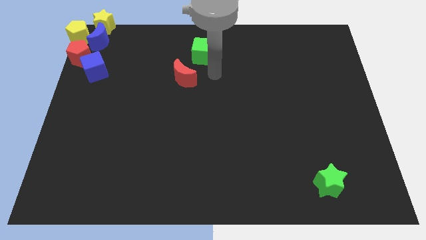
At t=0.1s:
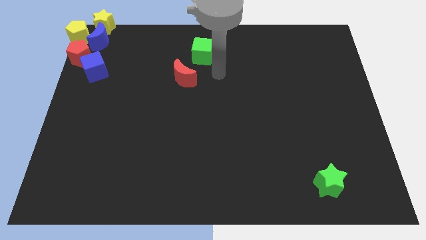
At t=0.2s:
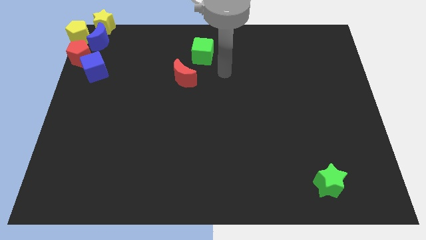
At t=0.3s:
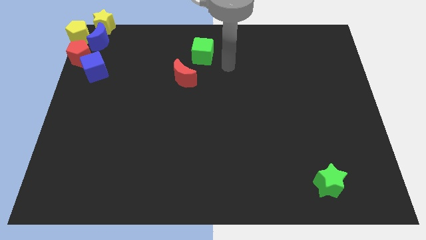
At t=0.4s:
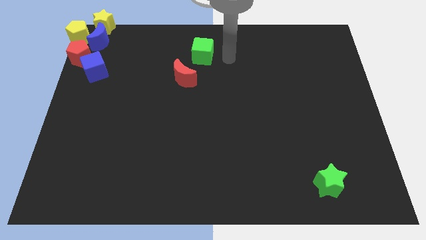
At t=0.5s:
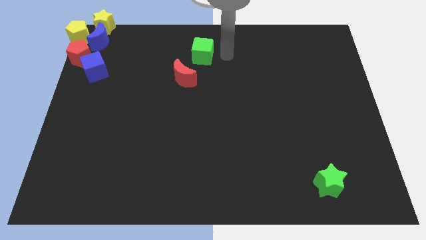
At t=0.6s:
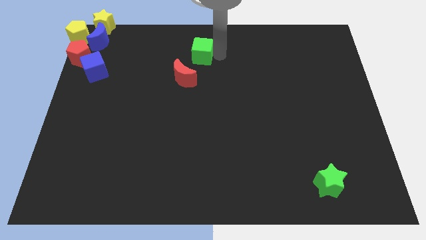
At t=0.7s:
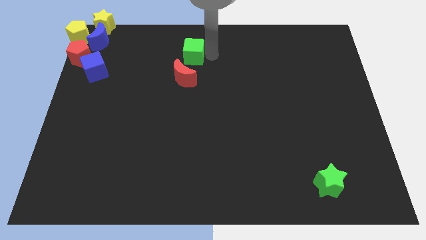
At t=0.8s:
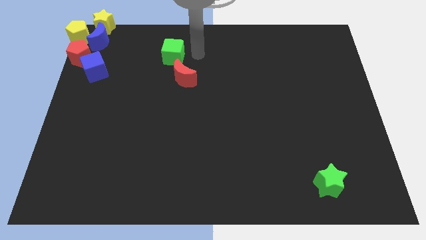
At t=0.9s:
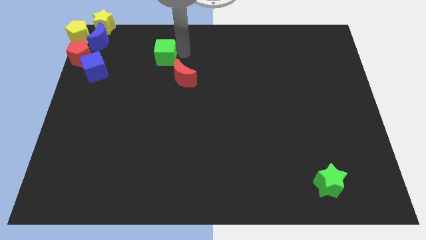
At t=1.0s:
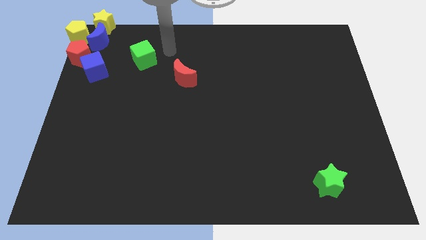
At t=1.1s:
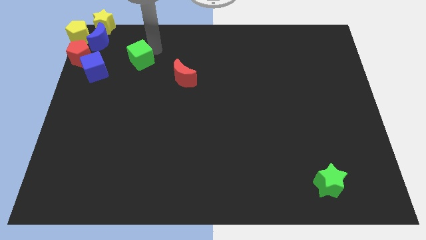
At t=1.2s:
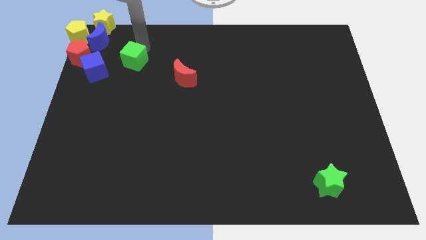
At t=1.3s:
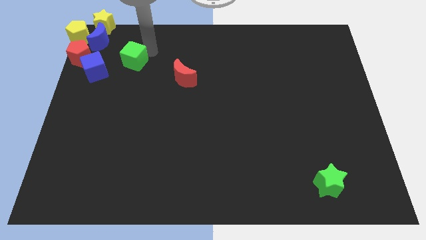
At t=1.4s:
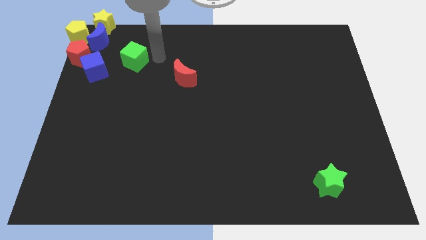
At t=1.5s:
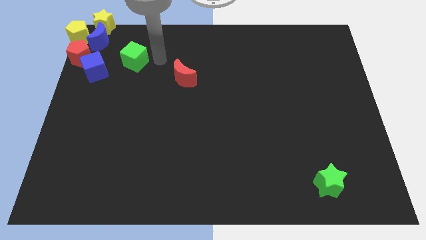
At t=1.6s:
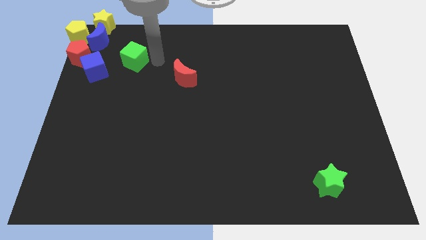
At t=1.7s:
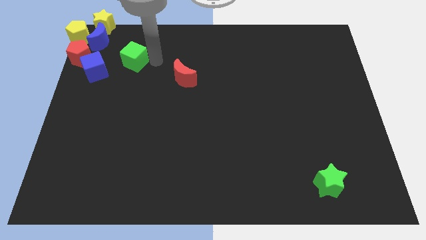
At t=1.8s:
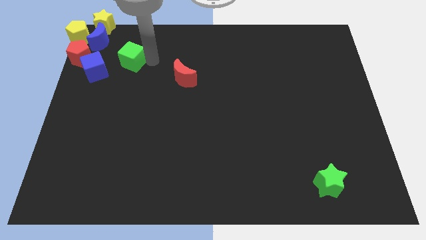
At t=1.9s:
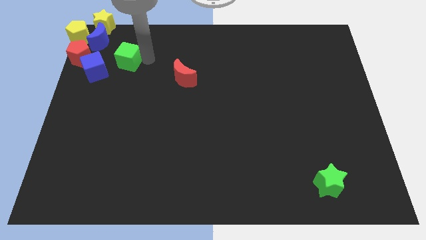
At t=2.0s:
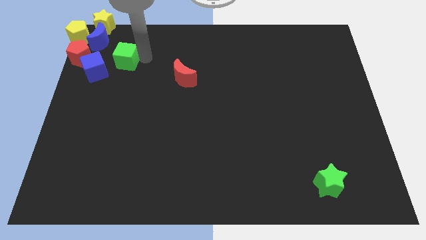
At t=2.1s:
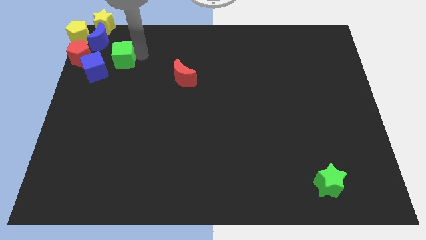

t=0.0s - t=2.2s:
slide green cube to the top right of blue cube

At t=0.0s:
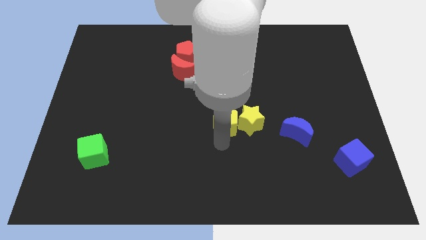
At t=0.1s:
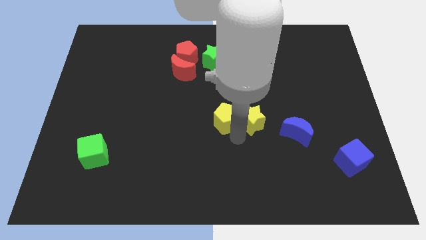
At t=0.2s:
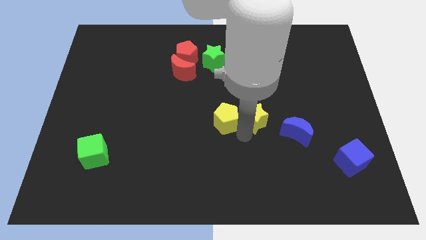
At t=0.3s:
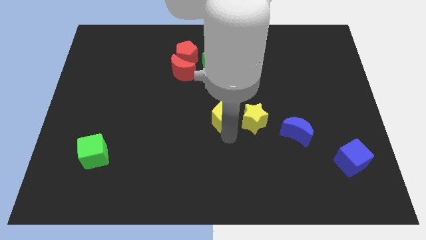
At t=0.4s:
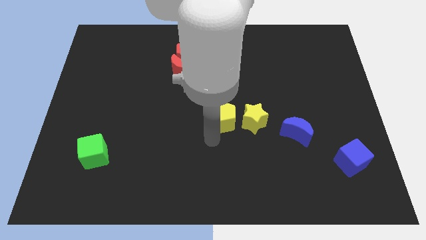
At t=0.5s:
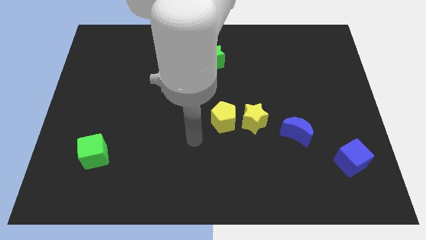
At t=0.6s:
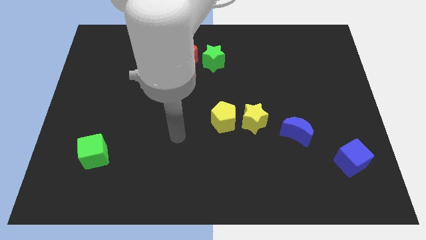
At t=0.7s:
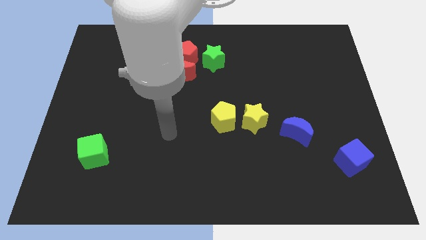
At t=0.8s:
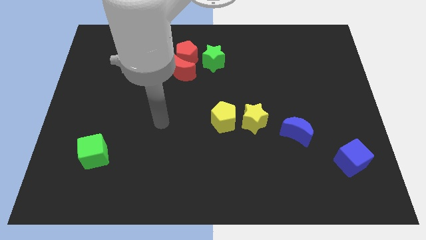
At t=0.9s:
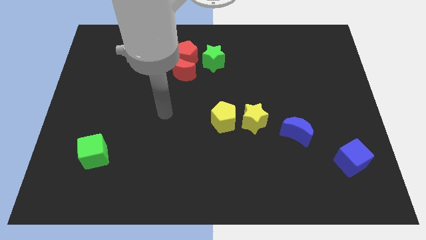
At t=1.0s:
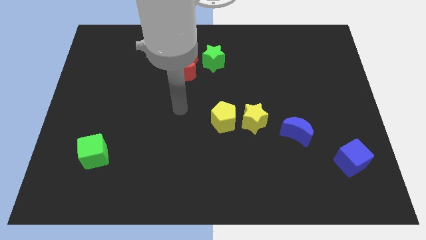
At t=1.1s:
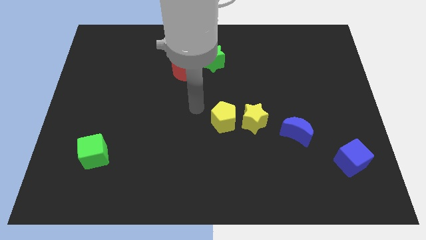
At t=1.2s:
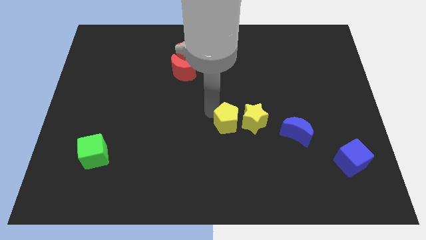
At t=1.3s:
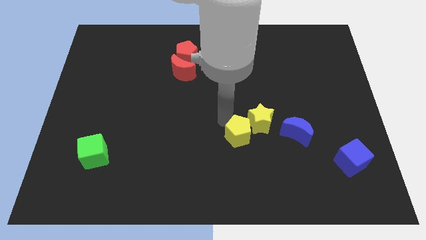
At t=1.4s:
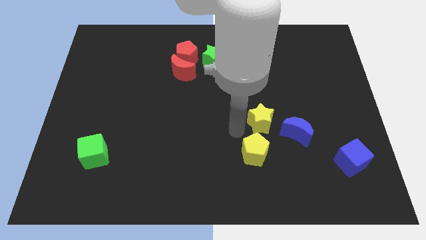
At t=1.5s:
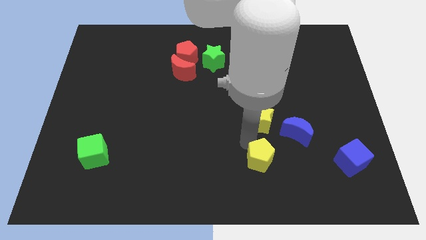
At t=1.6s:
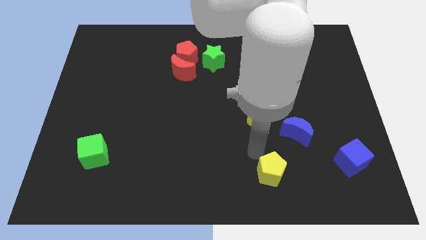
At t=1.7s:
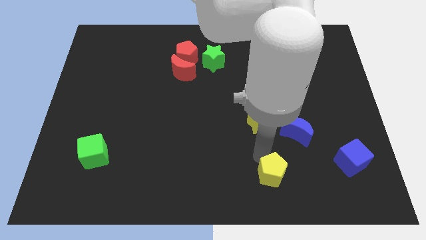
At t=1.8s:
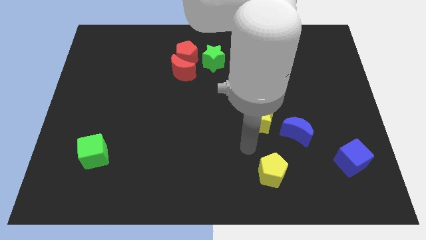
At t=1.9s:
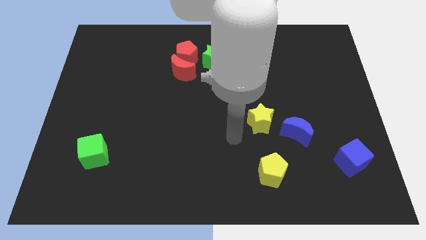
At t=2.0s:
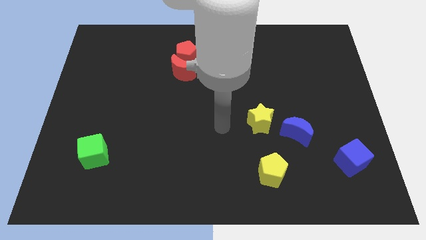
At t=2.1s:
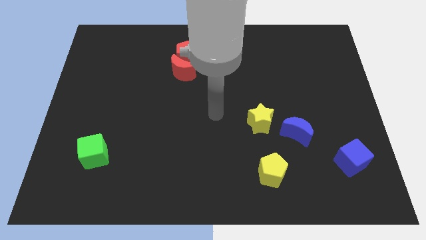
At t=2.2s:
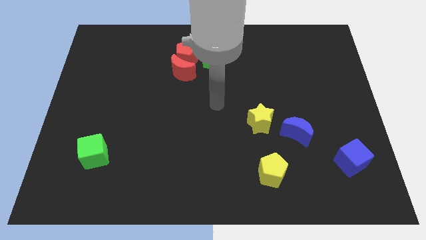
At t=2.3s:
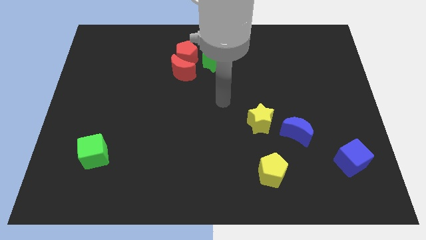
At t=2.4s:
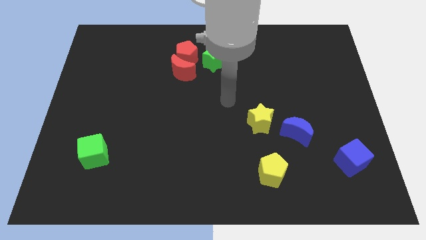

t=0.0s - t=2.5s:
place the yellow pentagon below the blue moon

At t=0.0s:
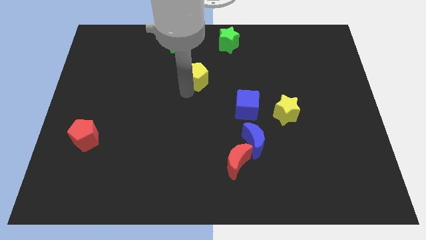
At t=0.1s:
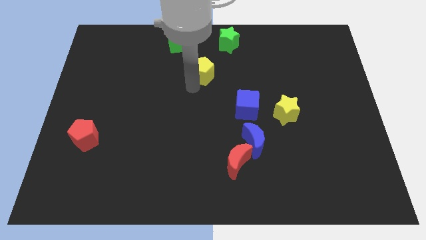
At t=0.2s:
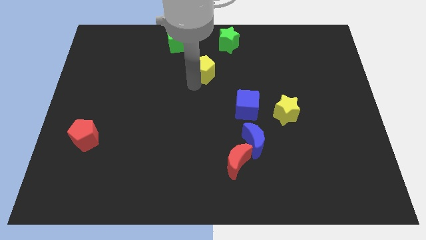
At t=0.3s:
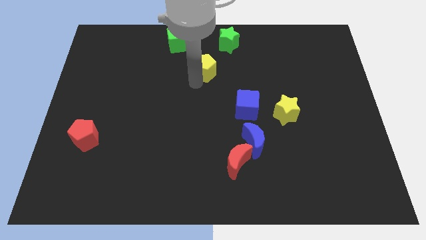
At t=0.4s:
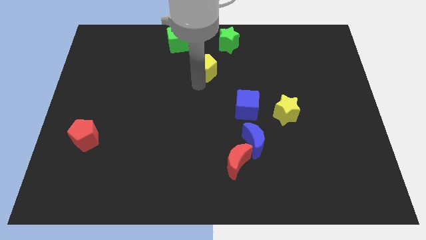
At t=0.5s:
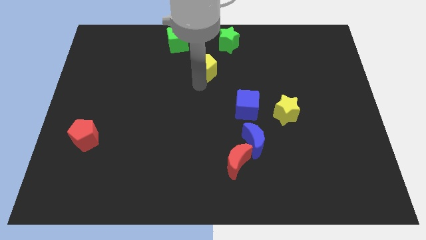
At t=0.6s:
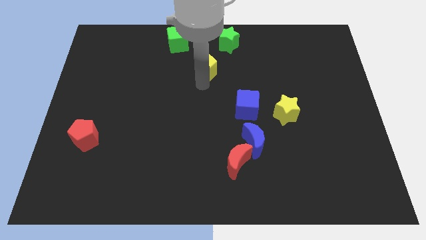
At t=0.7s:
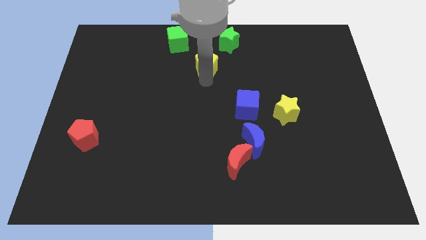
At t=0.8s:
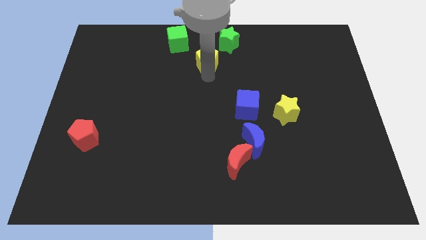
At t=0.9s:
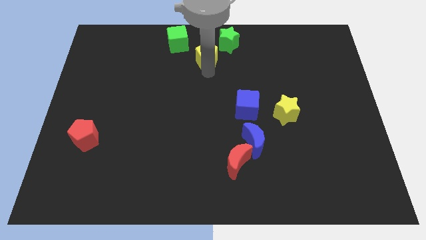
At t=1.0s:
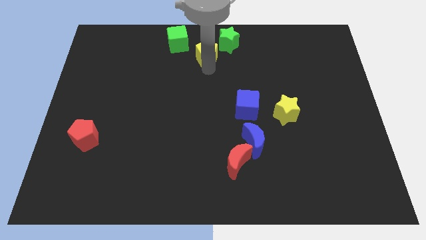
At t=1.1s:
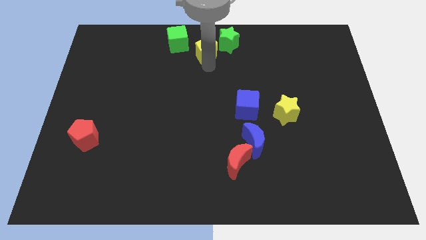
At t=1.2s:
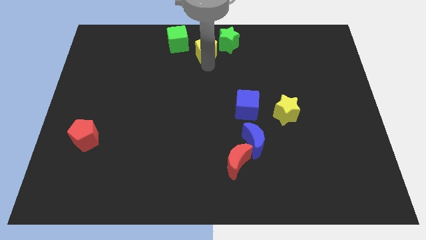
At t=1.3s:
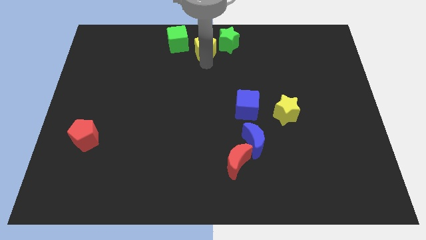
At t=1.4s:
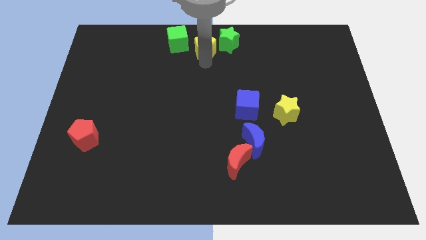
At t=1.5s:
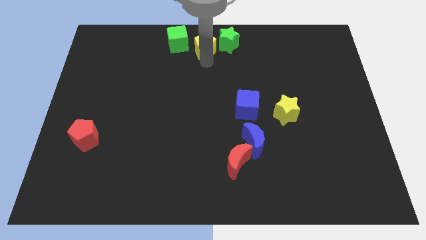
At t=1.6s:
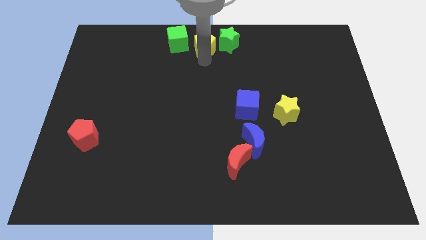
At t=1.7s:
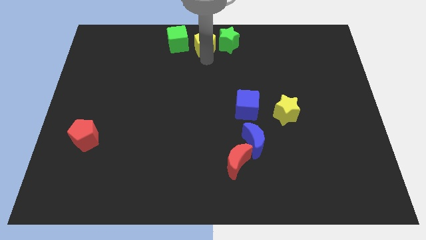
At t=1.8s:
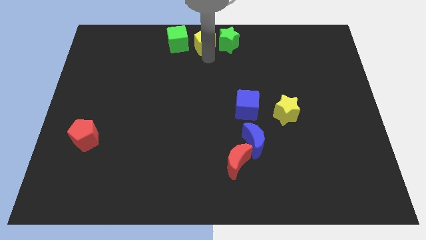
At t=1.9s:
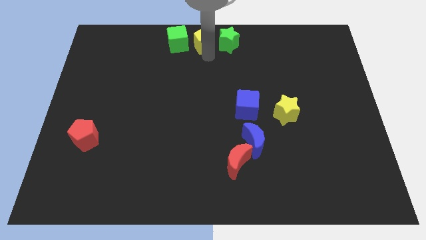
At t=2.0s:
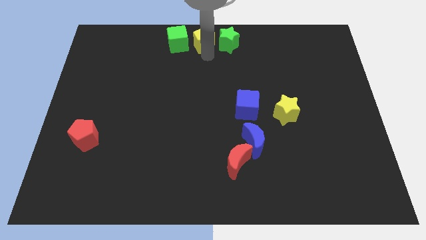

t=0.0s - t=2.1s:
push yellow pentagon to the top center

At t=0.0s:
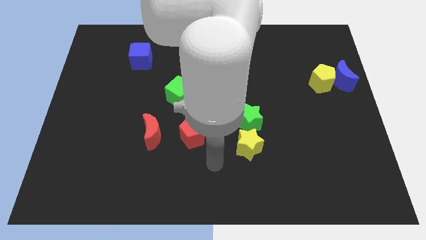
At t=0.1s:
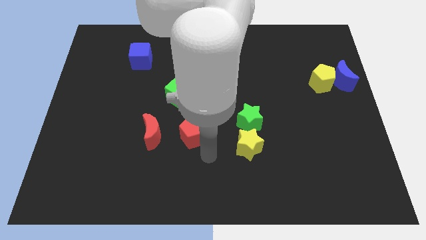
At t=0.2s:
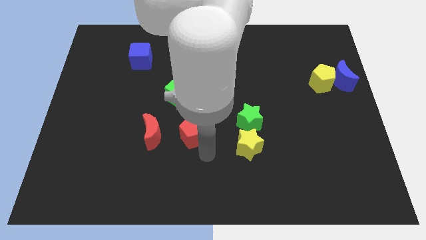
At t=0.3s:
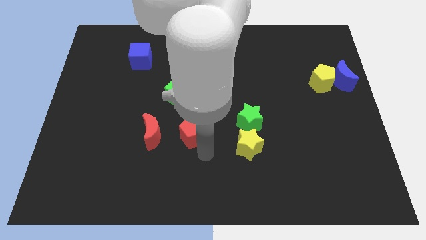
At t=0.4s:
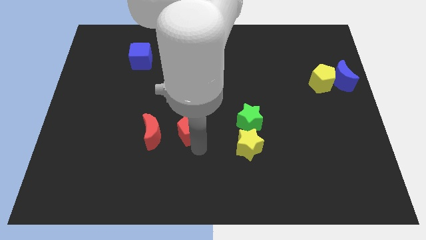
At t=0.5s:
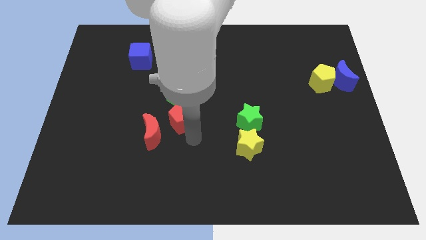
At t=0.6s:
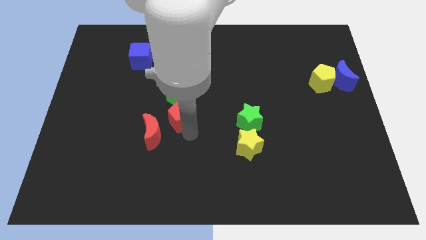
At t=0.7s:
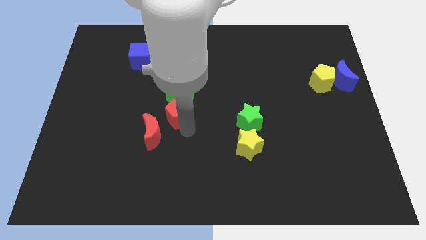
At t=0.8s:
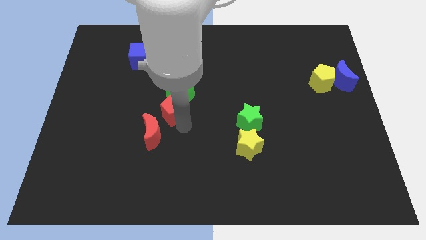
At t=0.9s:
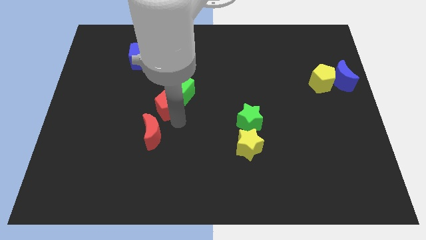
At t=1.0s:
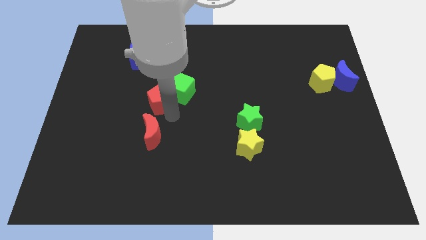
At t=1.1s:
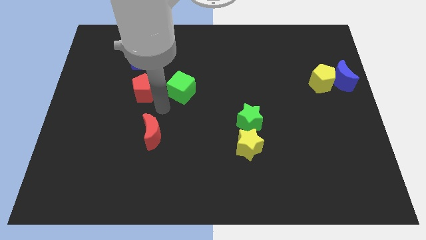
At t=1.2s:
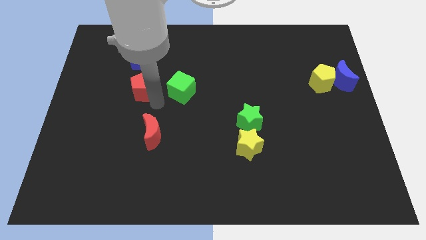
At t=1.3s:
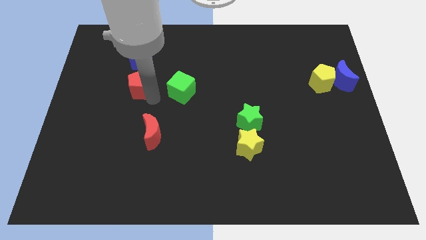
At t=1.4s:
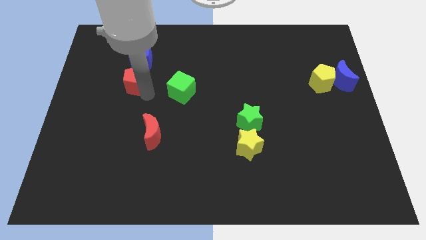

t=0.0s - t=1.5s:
place the red pentagon vertically below the blue cube

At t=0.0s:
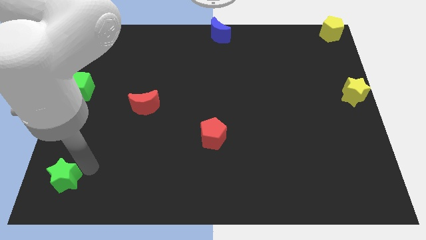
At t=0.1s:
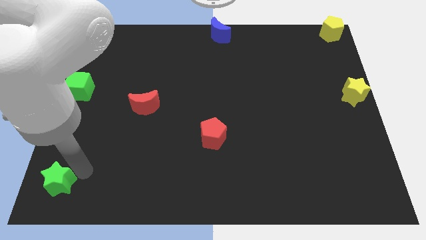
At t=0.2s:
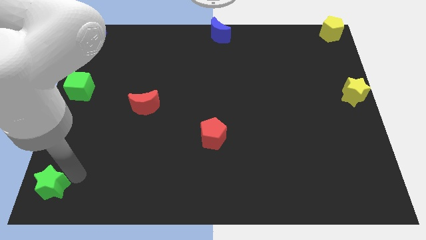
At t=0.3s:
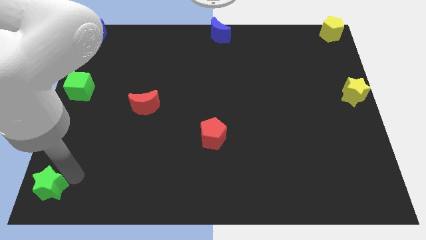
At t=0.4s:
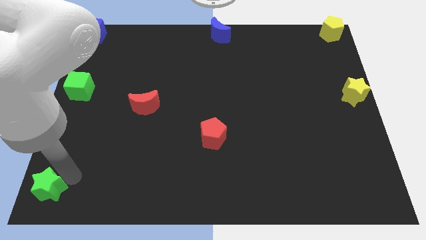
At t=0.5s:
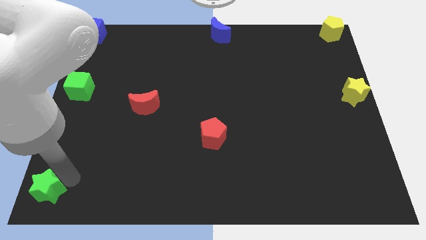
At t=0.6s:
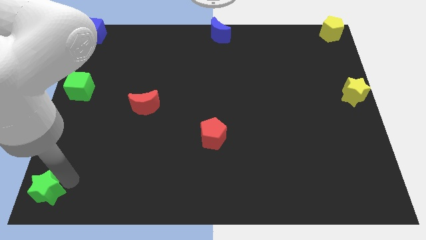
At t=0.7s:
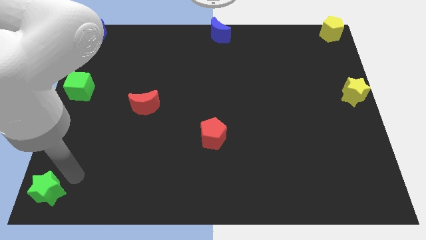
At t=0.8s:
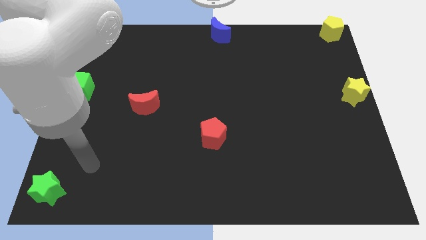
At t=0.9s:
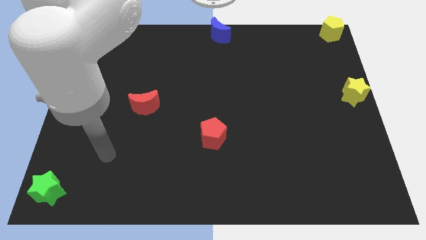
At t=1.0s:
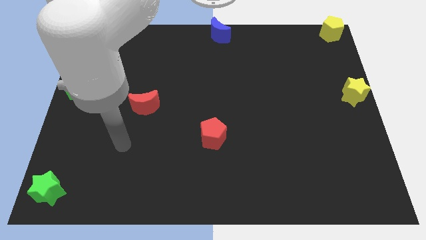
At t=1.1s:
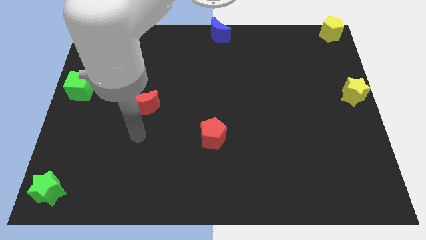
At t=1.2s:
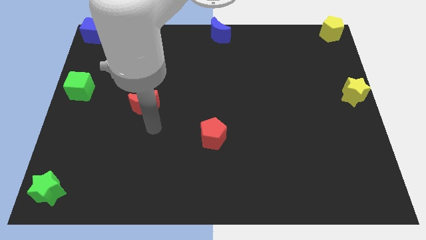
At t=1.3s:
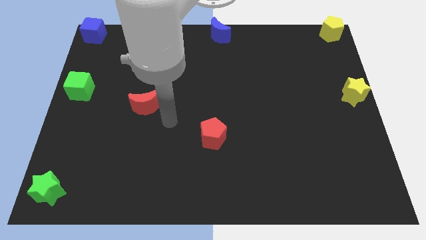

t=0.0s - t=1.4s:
move the green star towards the bottom left corner of the board
